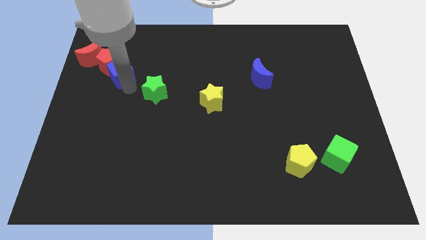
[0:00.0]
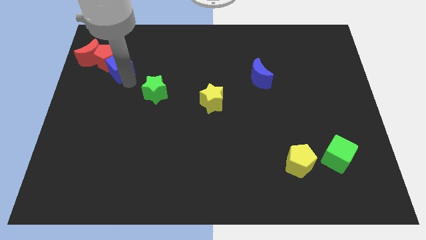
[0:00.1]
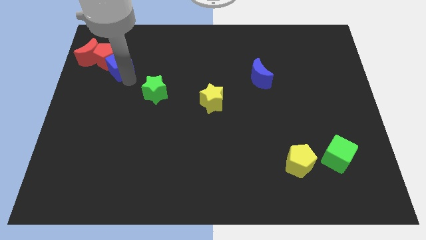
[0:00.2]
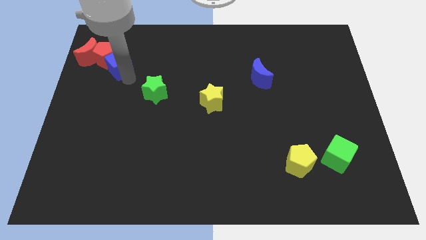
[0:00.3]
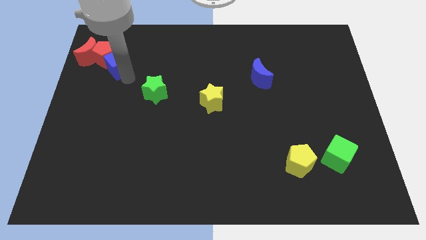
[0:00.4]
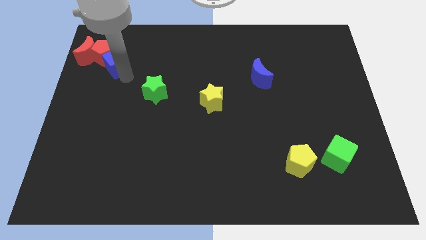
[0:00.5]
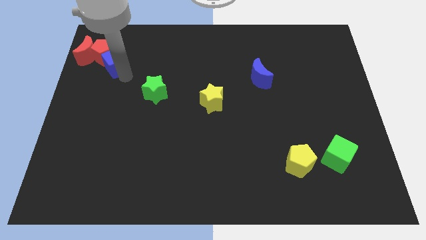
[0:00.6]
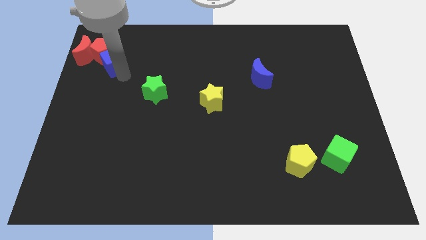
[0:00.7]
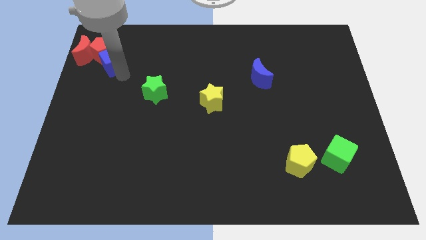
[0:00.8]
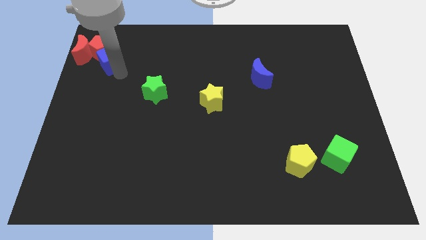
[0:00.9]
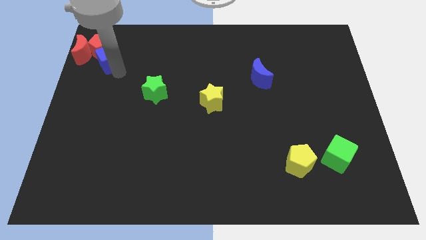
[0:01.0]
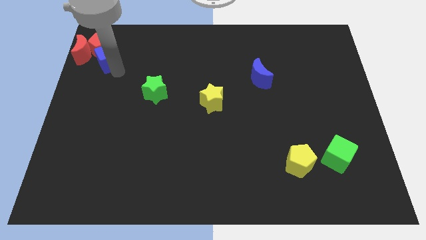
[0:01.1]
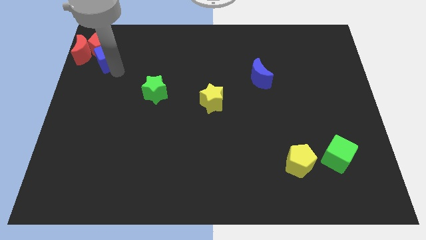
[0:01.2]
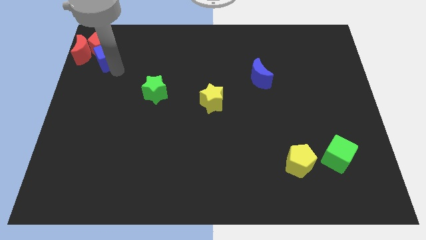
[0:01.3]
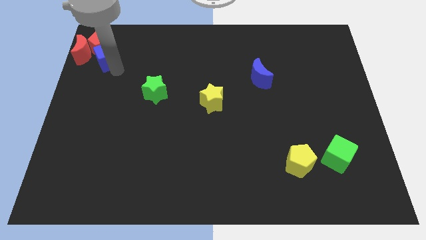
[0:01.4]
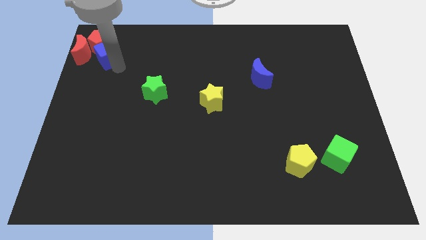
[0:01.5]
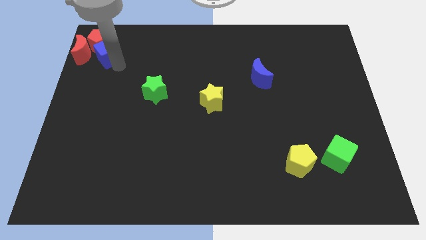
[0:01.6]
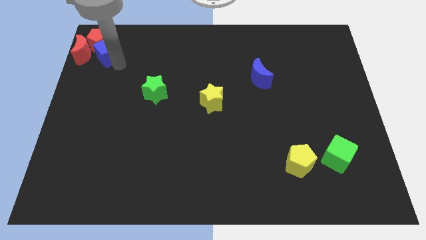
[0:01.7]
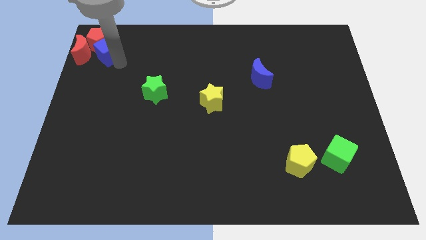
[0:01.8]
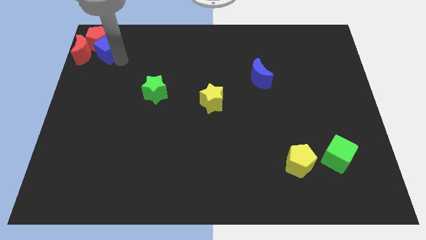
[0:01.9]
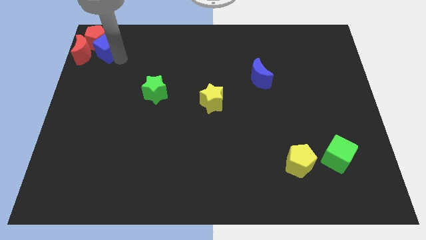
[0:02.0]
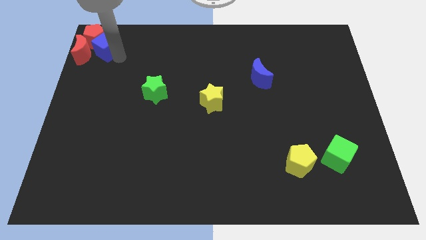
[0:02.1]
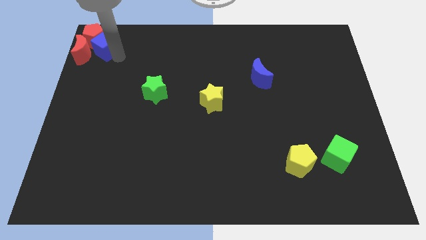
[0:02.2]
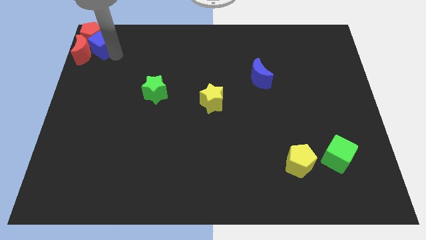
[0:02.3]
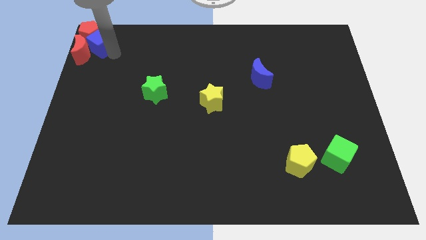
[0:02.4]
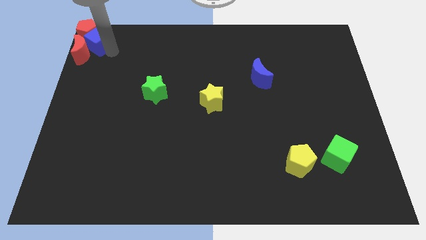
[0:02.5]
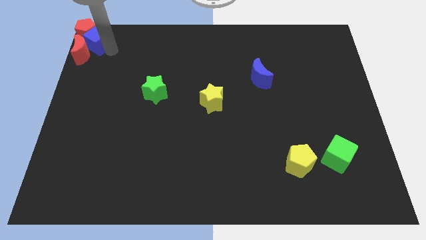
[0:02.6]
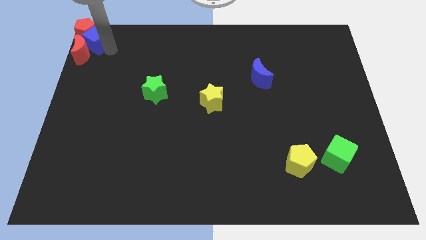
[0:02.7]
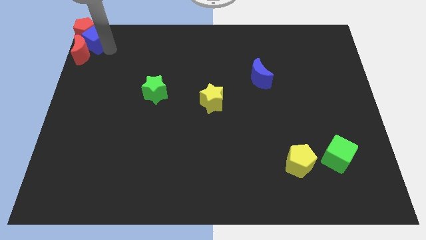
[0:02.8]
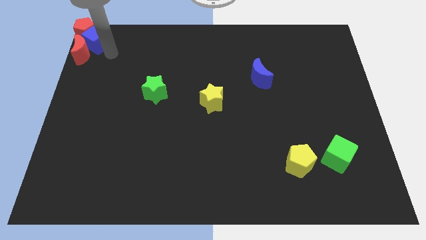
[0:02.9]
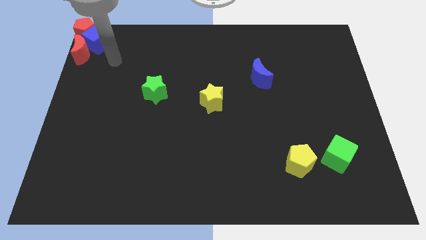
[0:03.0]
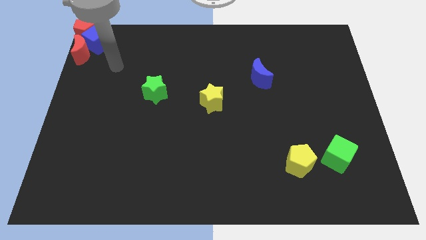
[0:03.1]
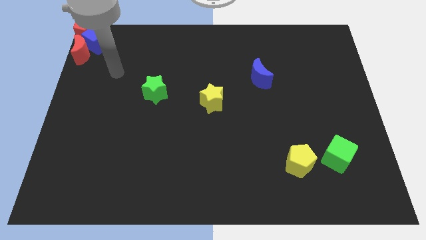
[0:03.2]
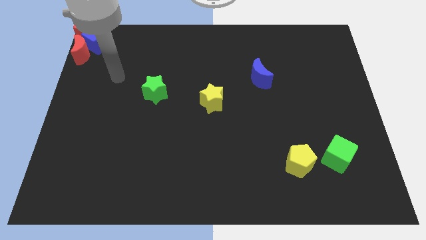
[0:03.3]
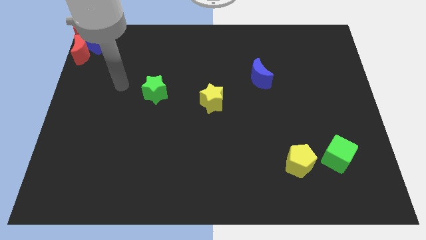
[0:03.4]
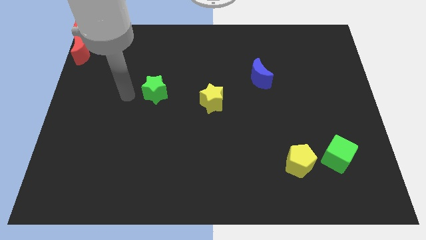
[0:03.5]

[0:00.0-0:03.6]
push the red pentagon to the top left corner of the board with the help of blue cube

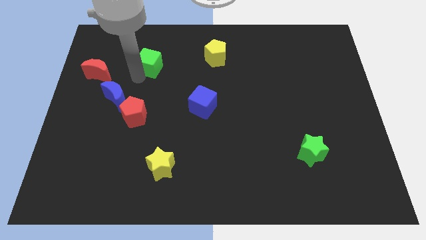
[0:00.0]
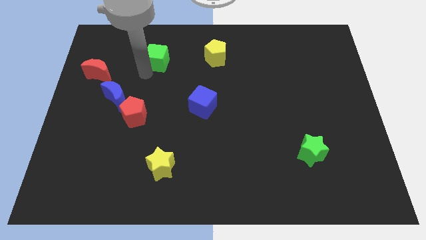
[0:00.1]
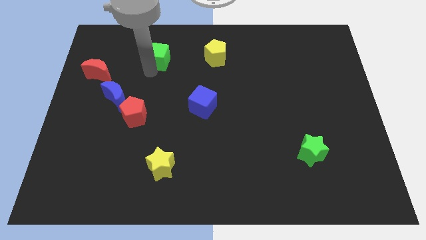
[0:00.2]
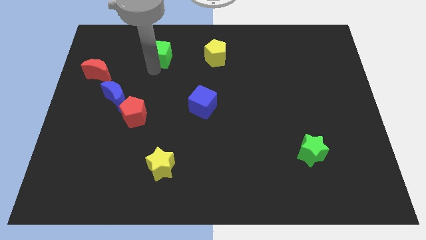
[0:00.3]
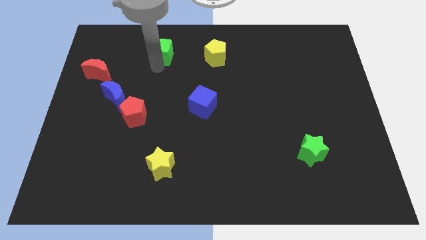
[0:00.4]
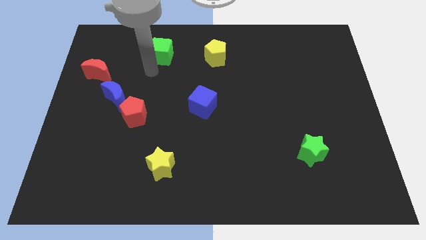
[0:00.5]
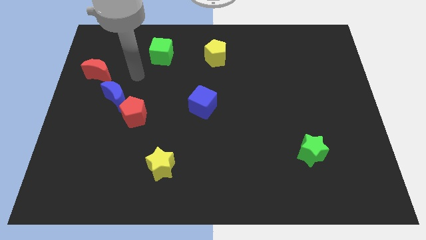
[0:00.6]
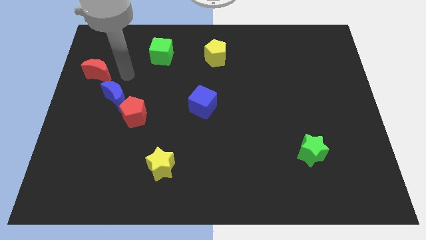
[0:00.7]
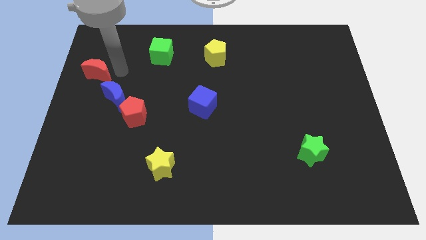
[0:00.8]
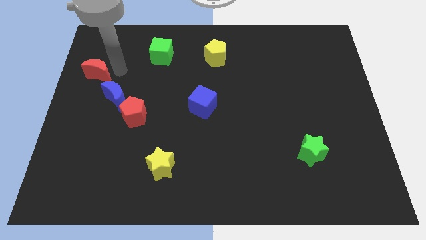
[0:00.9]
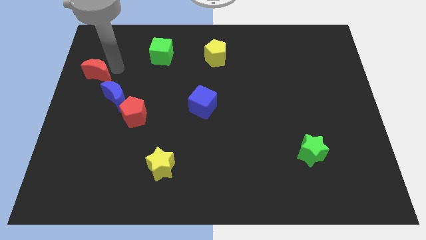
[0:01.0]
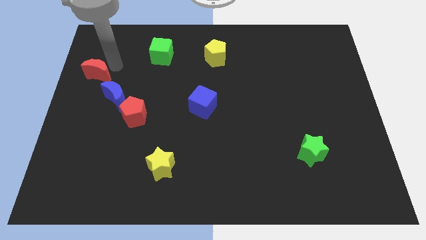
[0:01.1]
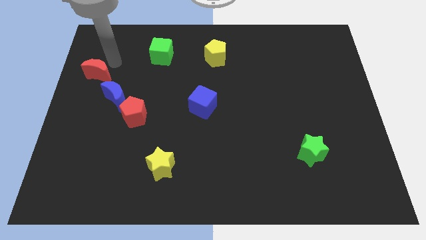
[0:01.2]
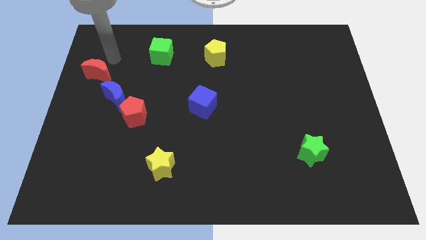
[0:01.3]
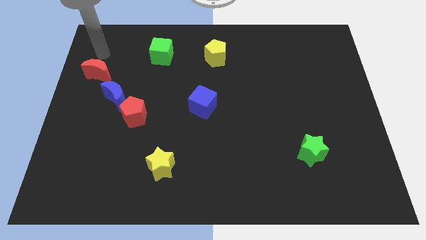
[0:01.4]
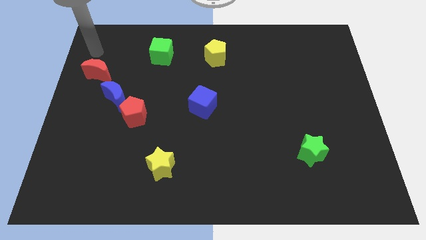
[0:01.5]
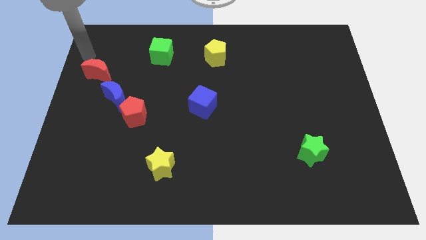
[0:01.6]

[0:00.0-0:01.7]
place the green cube parallel left to the yellow pentagon

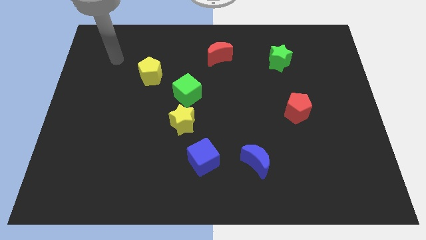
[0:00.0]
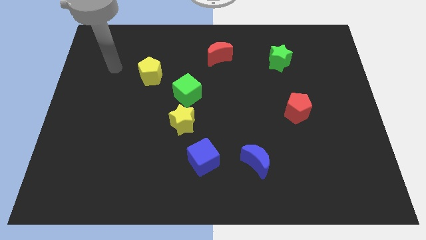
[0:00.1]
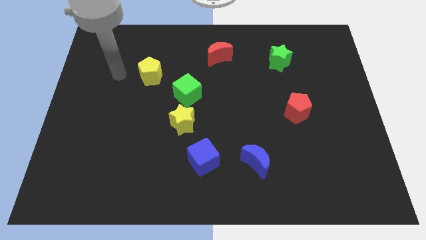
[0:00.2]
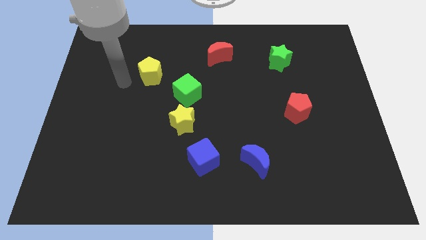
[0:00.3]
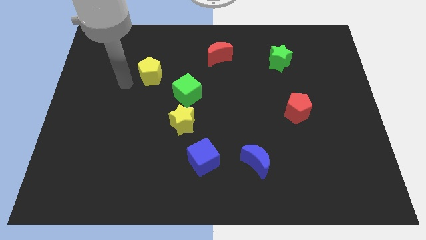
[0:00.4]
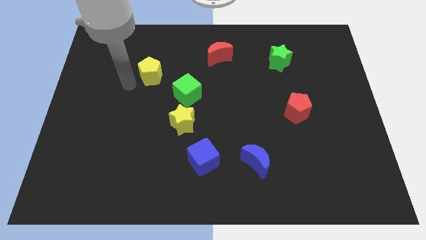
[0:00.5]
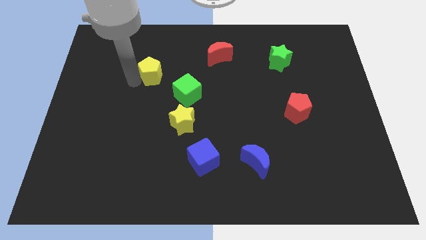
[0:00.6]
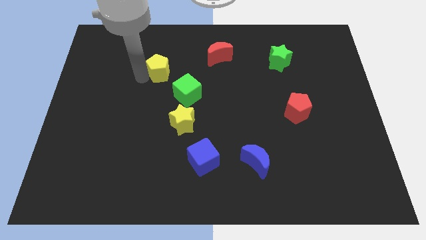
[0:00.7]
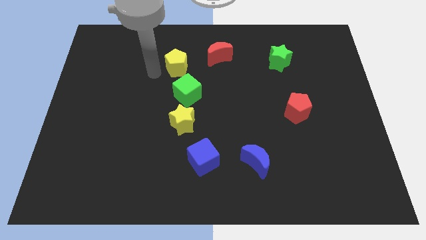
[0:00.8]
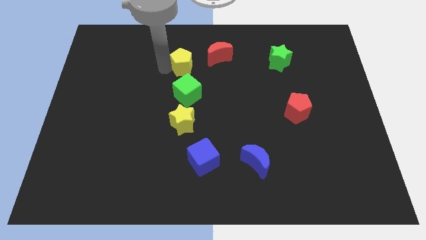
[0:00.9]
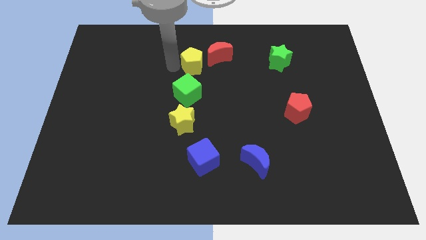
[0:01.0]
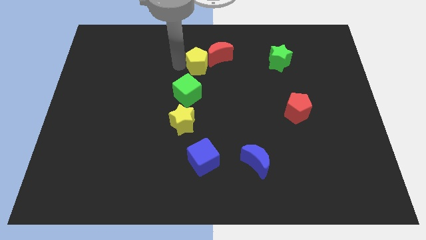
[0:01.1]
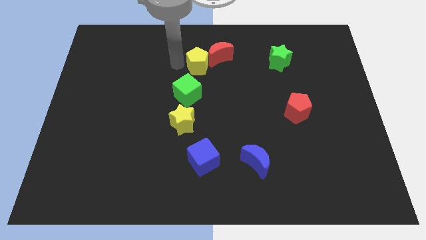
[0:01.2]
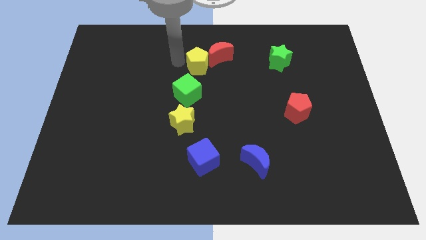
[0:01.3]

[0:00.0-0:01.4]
push the yellow pentagon into the red moon

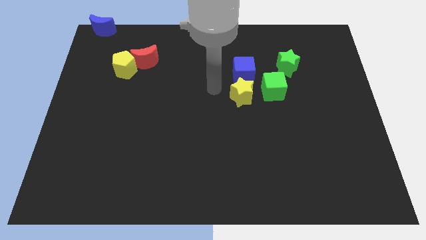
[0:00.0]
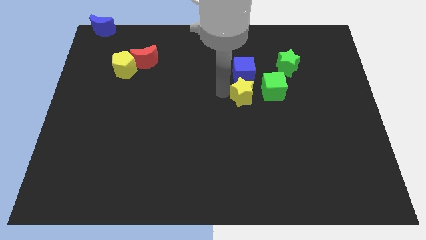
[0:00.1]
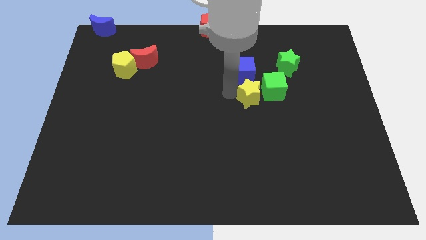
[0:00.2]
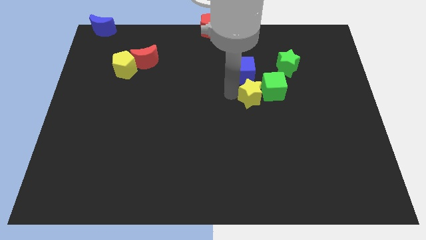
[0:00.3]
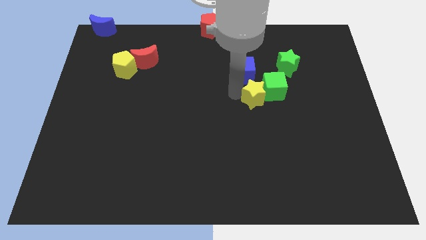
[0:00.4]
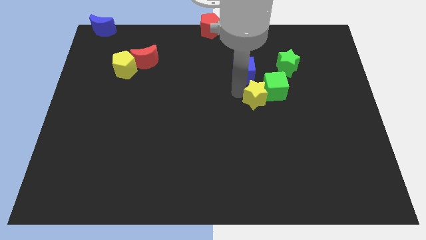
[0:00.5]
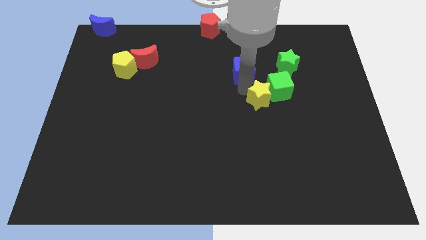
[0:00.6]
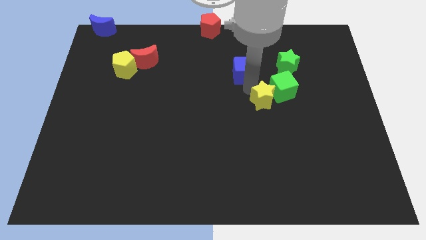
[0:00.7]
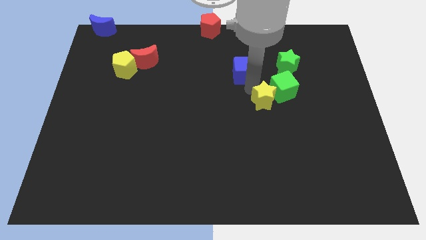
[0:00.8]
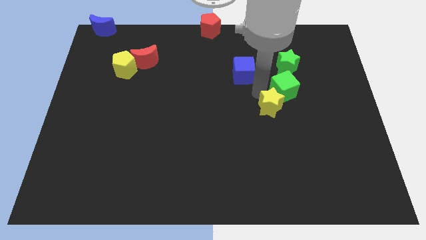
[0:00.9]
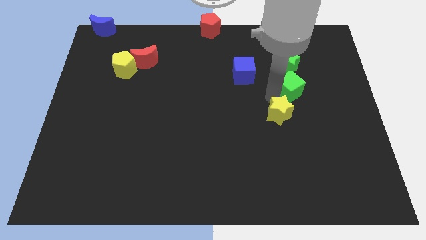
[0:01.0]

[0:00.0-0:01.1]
separate the yellow star from the blue cube

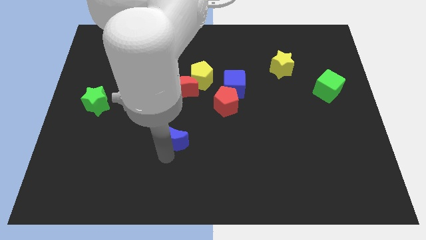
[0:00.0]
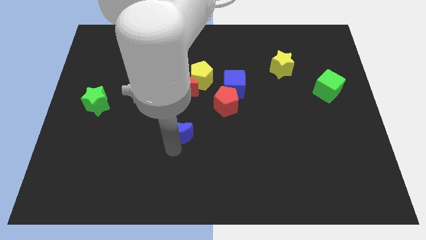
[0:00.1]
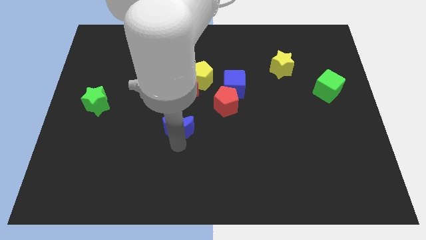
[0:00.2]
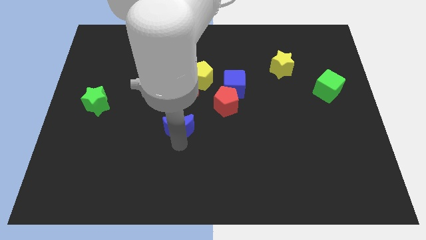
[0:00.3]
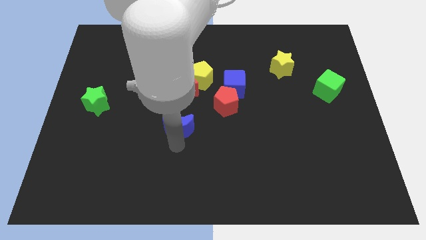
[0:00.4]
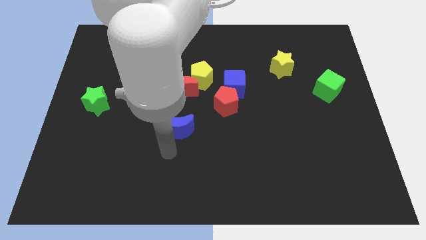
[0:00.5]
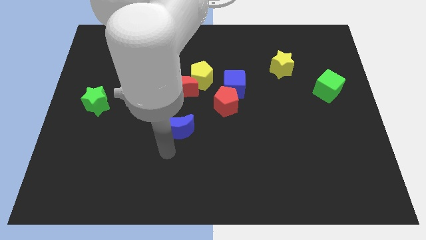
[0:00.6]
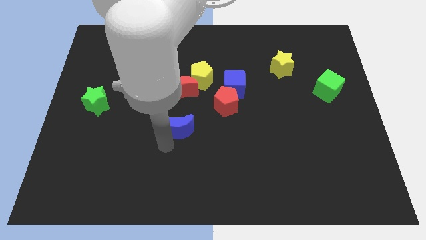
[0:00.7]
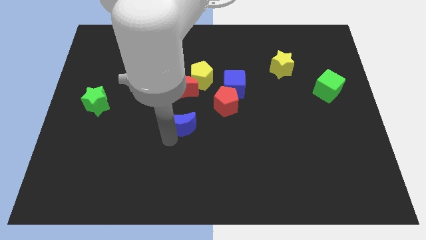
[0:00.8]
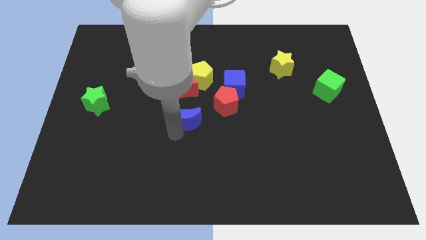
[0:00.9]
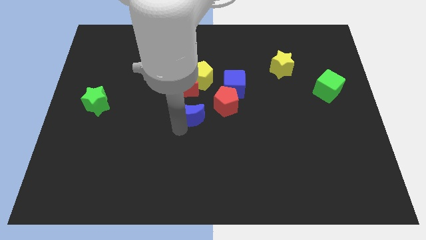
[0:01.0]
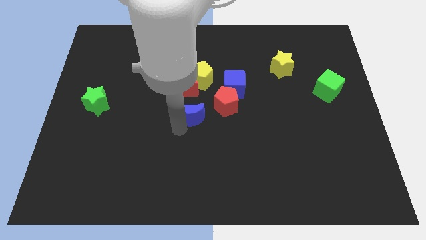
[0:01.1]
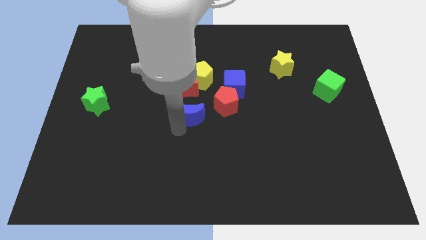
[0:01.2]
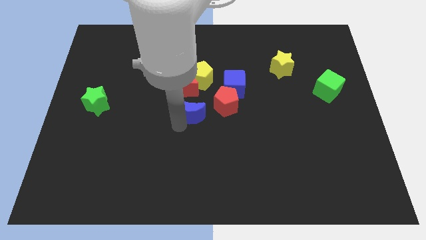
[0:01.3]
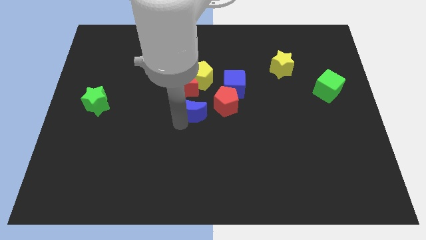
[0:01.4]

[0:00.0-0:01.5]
move the blue crescent to the center
